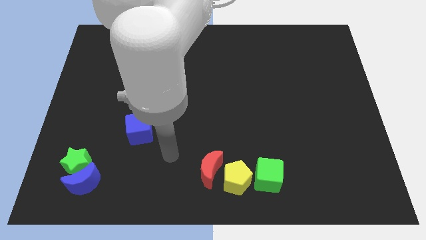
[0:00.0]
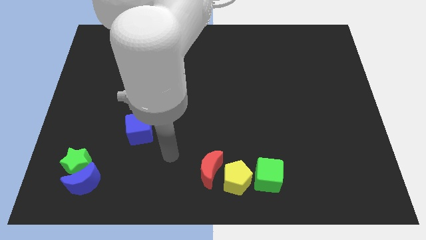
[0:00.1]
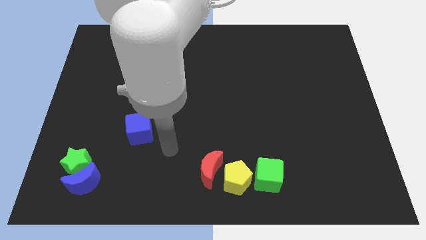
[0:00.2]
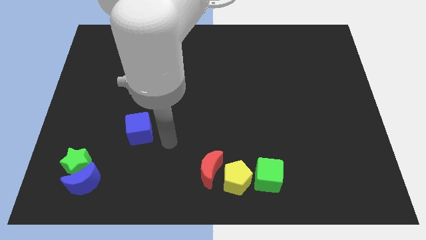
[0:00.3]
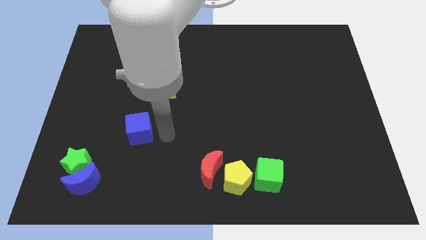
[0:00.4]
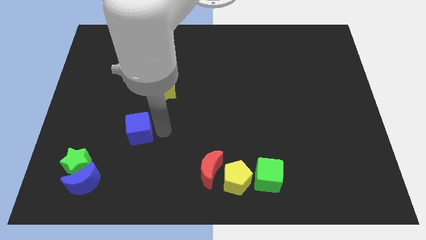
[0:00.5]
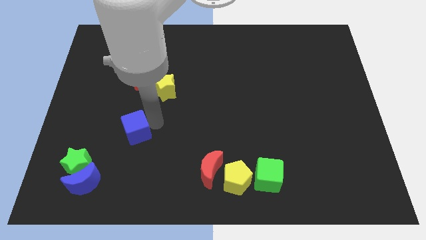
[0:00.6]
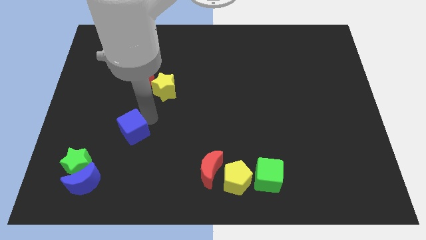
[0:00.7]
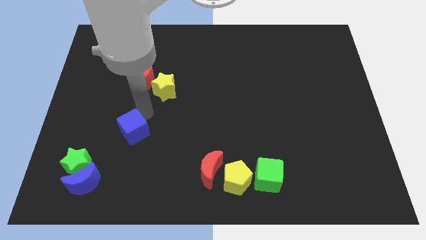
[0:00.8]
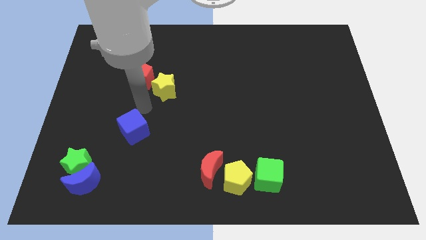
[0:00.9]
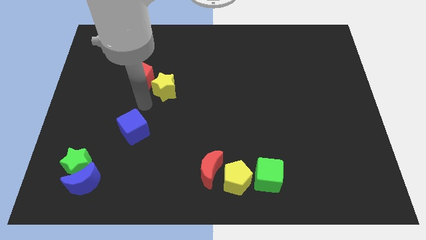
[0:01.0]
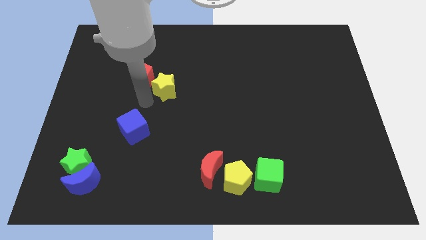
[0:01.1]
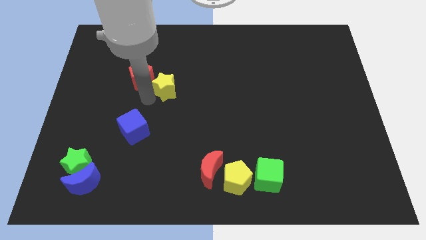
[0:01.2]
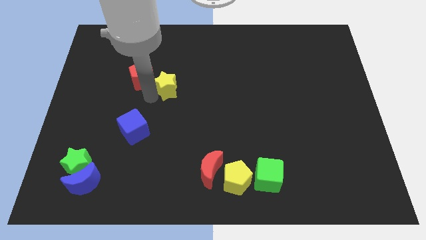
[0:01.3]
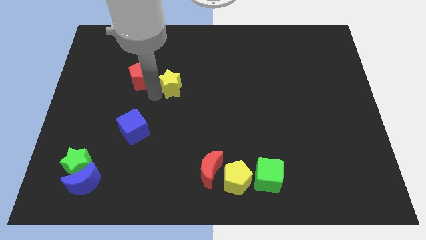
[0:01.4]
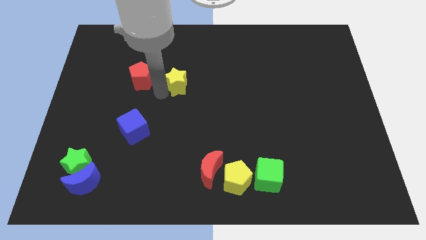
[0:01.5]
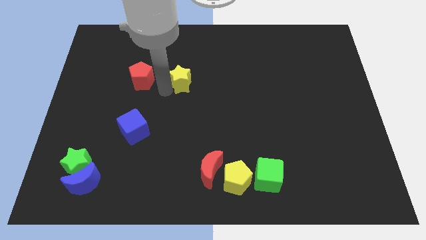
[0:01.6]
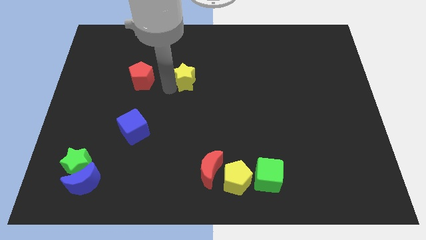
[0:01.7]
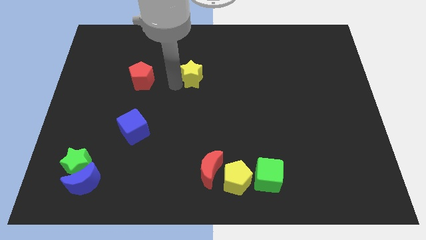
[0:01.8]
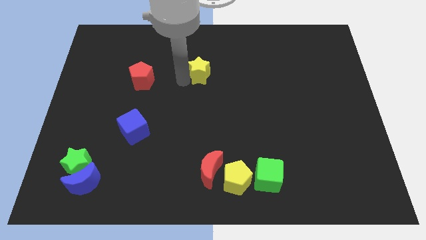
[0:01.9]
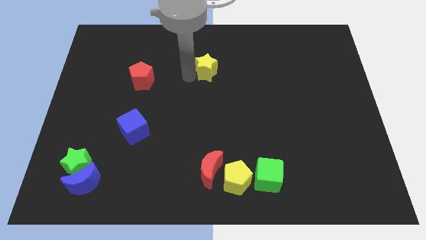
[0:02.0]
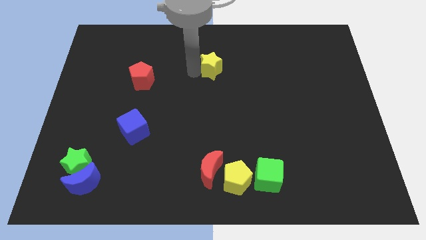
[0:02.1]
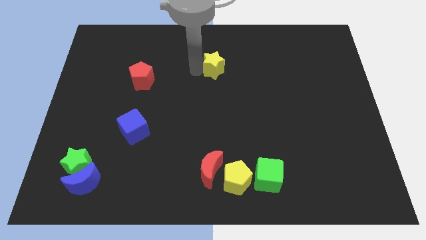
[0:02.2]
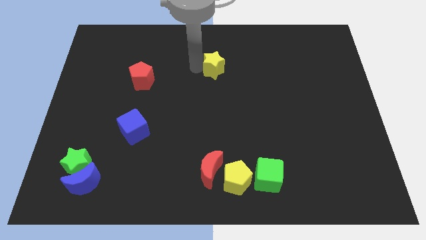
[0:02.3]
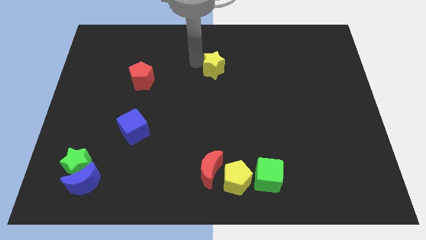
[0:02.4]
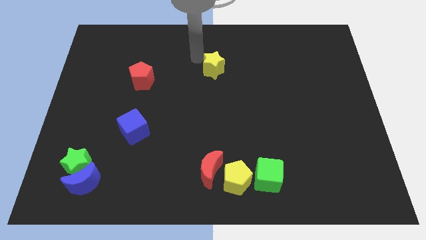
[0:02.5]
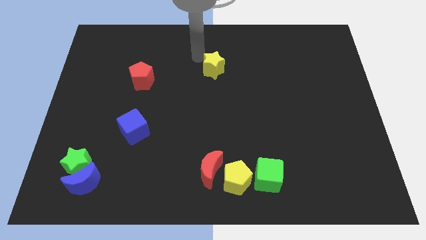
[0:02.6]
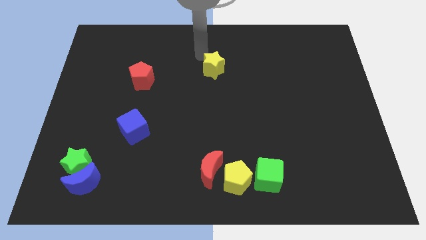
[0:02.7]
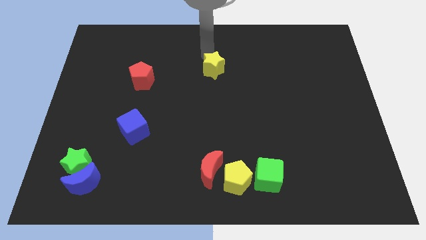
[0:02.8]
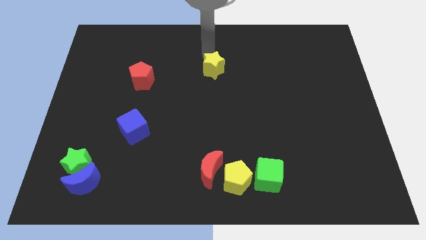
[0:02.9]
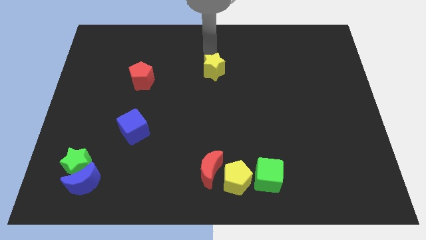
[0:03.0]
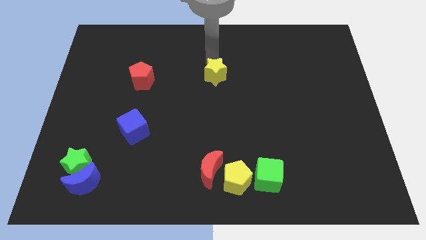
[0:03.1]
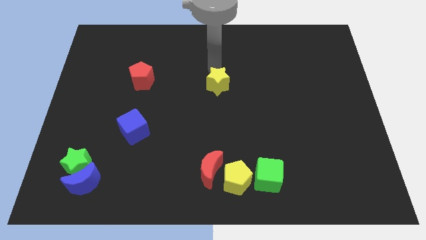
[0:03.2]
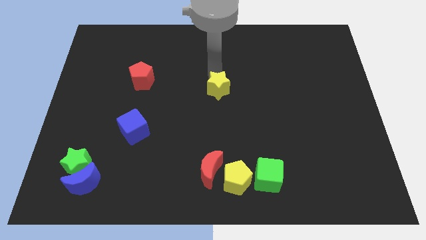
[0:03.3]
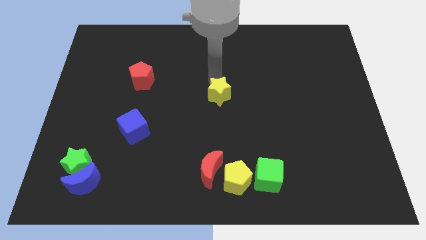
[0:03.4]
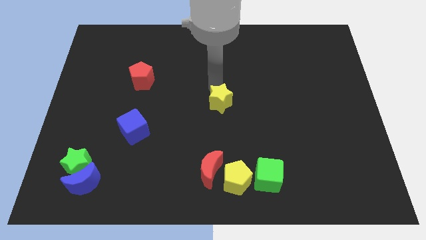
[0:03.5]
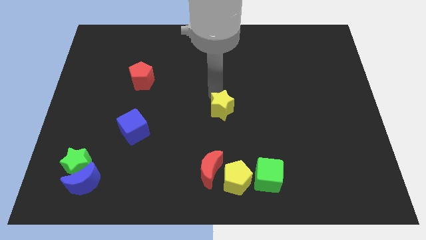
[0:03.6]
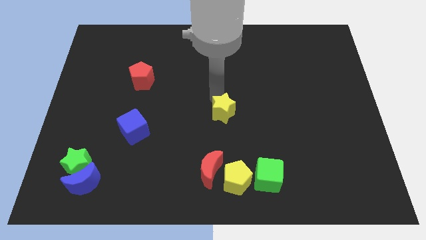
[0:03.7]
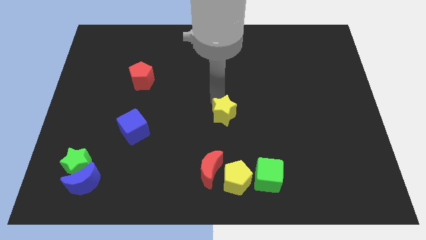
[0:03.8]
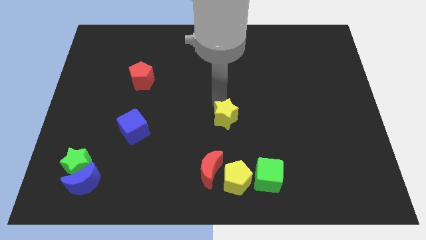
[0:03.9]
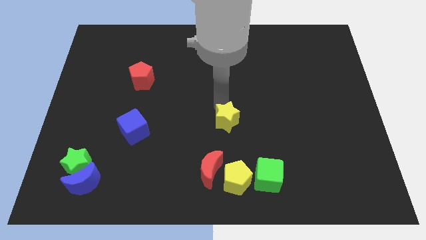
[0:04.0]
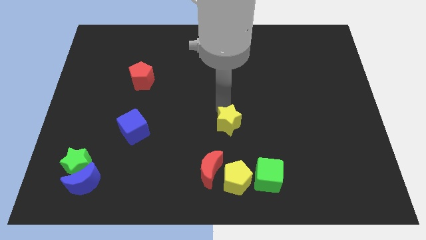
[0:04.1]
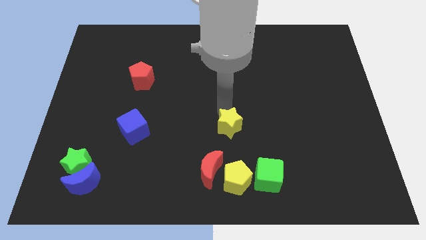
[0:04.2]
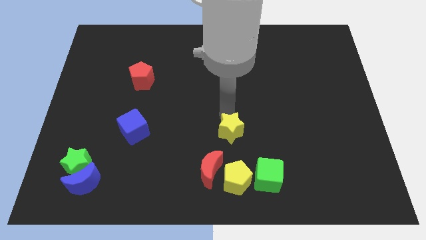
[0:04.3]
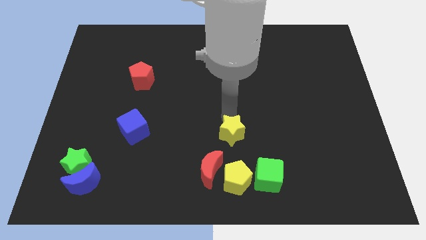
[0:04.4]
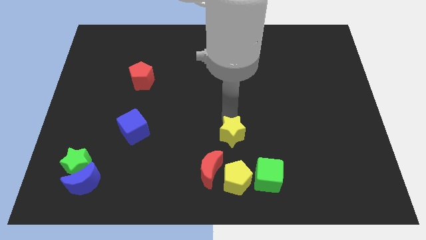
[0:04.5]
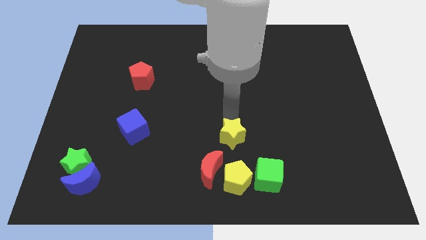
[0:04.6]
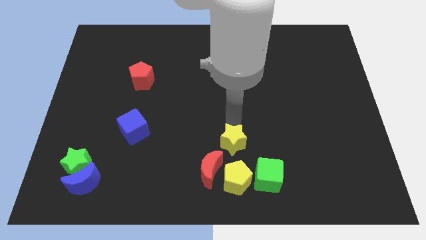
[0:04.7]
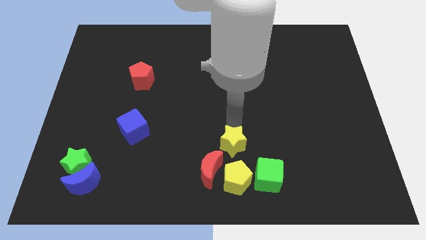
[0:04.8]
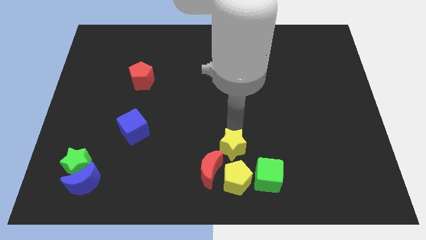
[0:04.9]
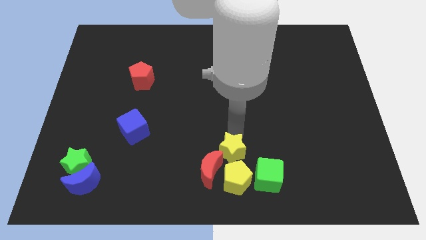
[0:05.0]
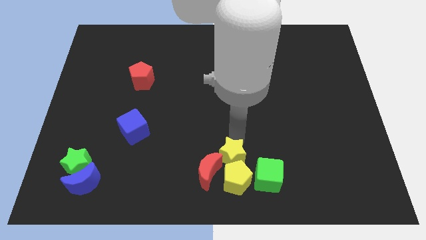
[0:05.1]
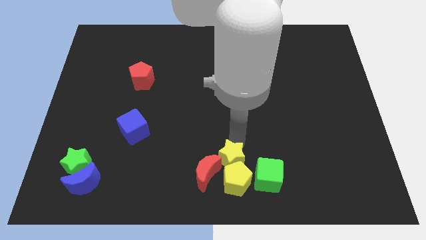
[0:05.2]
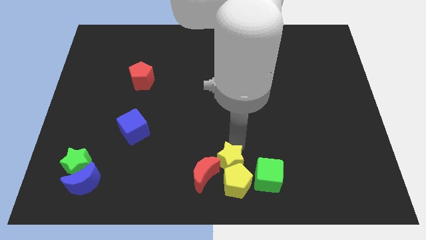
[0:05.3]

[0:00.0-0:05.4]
slide the yellow star to the yellow pentagon

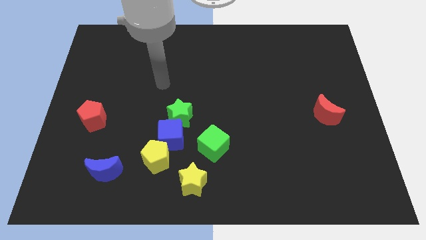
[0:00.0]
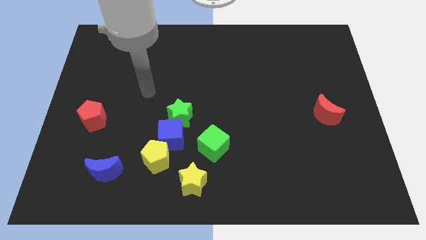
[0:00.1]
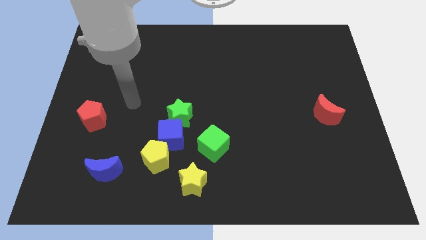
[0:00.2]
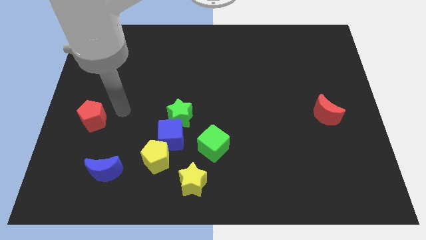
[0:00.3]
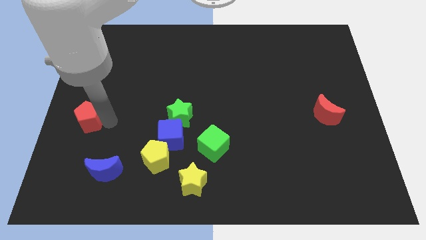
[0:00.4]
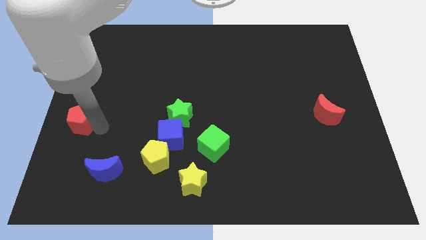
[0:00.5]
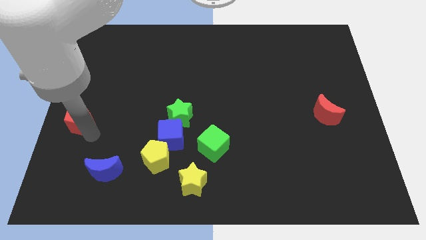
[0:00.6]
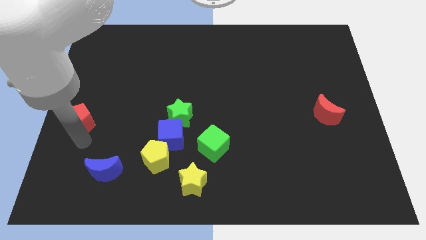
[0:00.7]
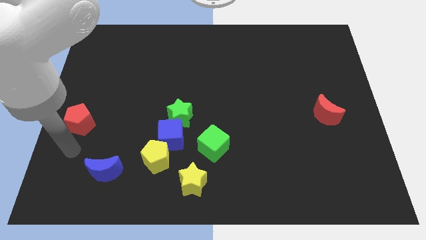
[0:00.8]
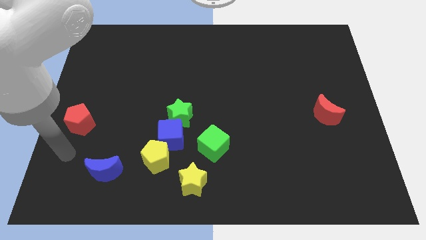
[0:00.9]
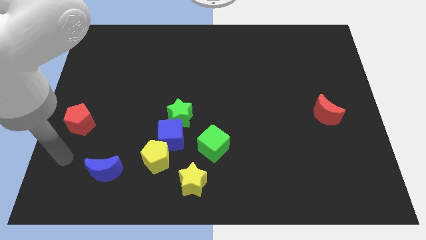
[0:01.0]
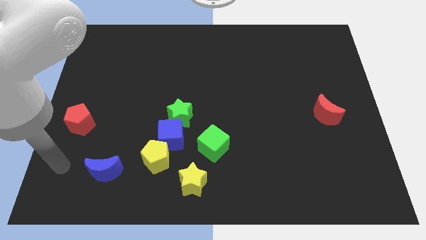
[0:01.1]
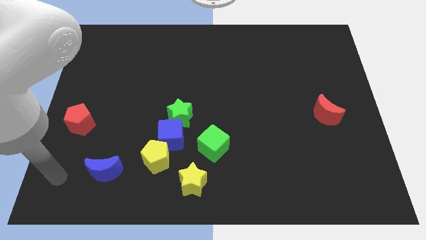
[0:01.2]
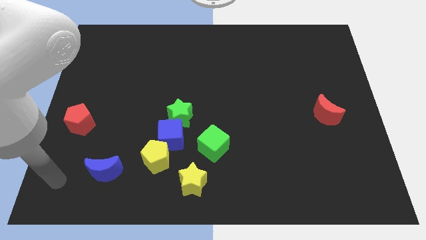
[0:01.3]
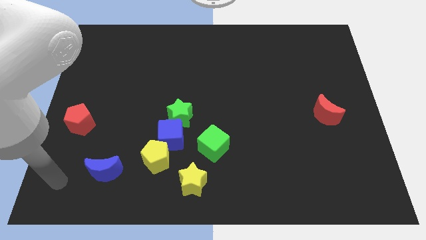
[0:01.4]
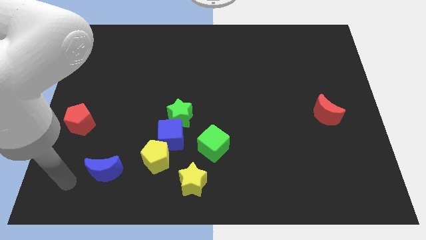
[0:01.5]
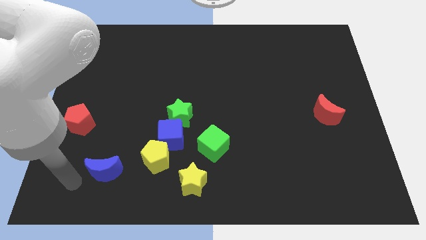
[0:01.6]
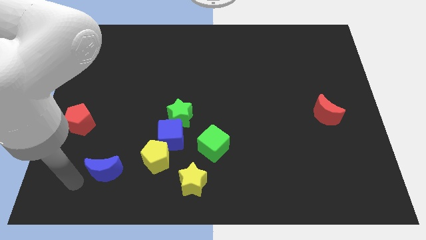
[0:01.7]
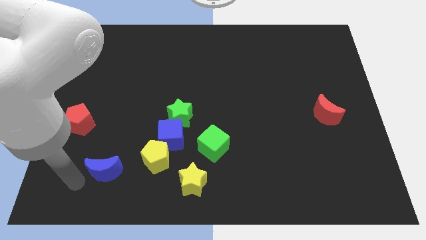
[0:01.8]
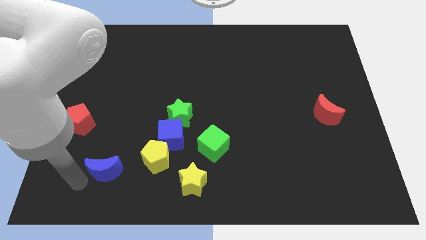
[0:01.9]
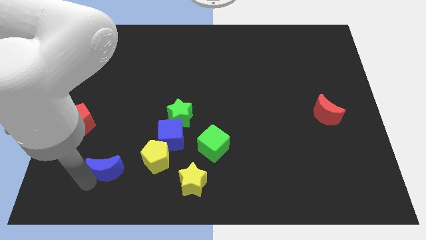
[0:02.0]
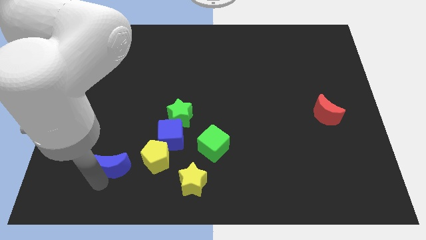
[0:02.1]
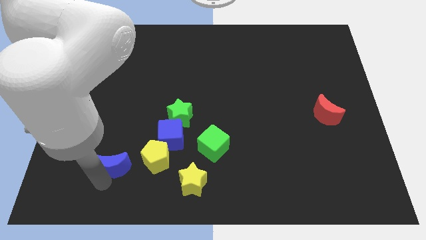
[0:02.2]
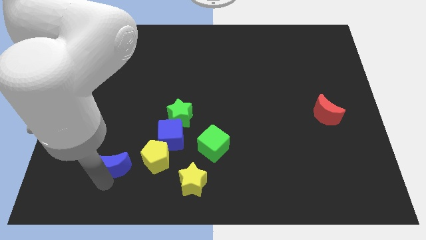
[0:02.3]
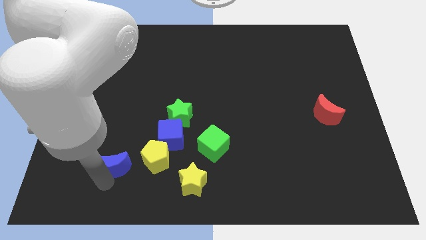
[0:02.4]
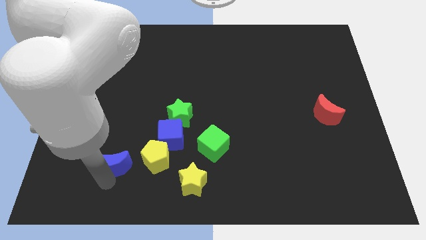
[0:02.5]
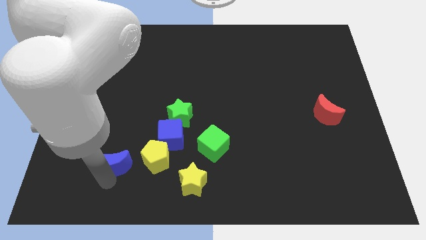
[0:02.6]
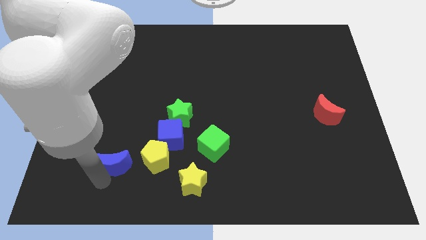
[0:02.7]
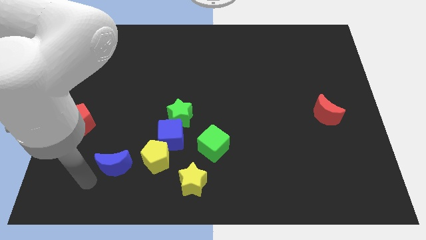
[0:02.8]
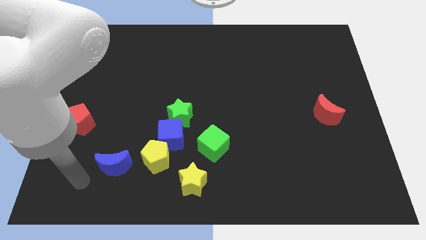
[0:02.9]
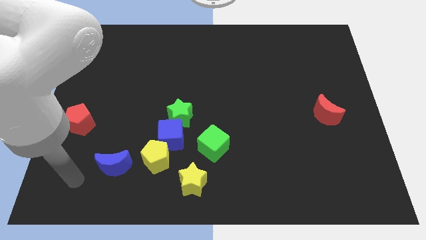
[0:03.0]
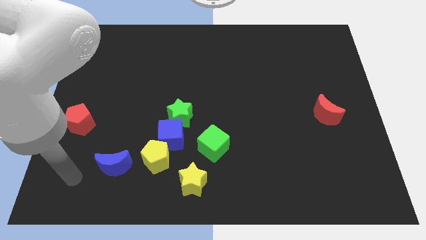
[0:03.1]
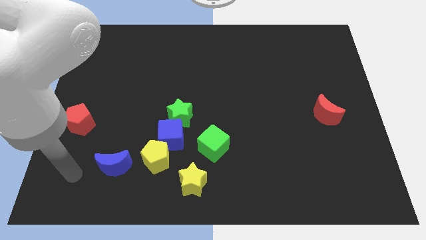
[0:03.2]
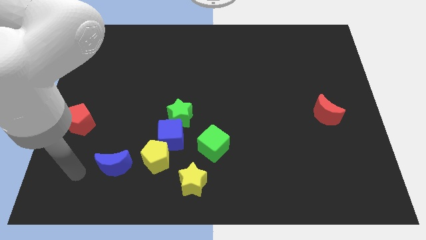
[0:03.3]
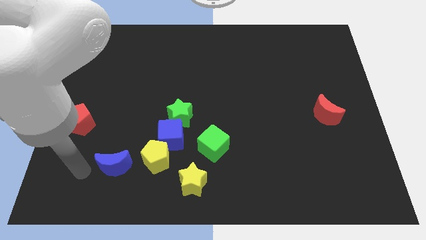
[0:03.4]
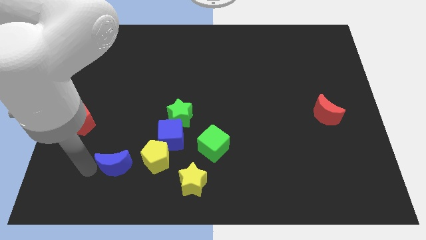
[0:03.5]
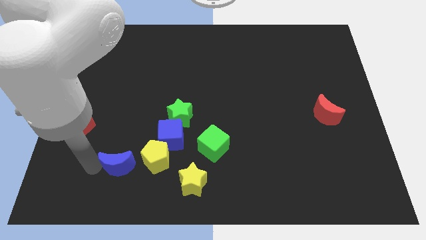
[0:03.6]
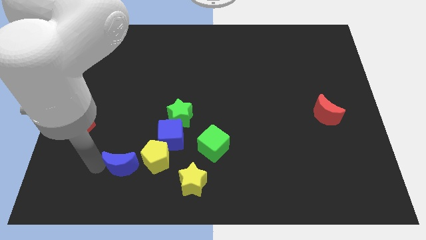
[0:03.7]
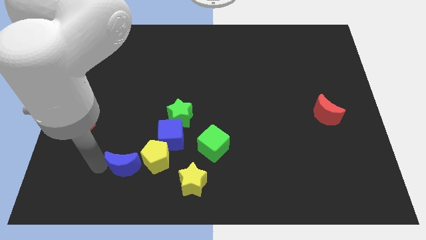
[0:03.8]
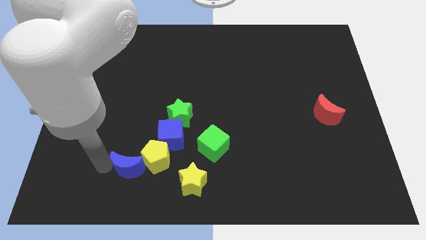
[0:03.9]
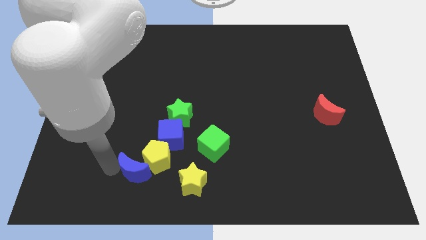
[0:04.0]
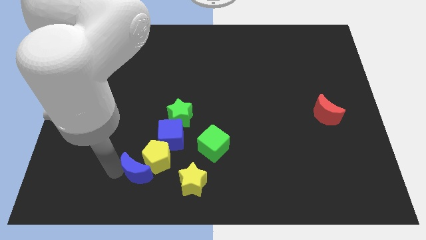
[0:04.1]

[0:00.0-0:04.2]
move the blue moon close to the yellow pentagon
